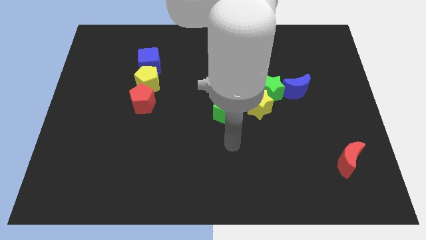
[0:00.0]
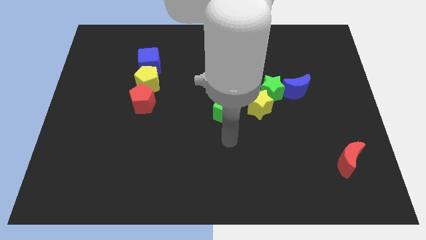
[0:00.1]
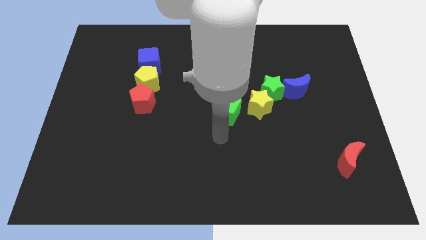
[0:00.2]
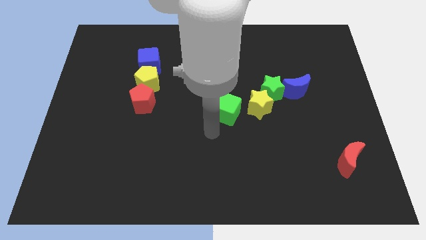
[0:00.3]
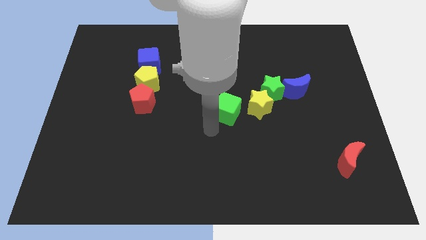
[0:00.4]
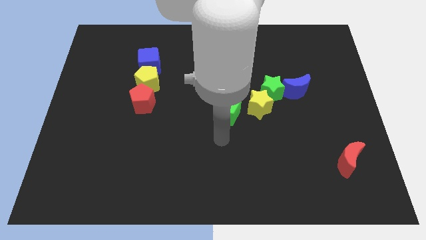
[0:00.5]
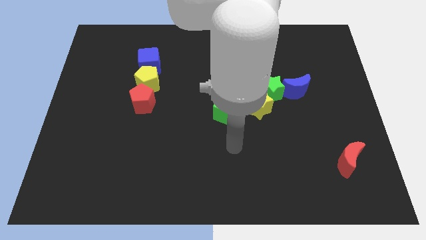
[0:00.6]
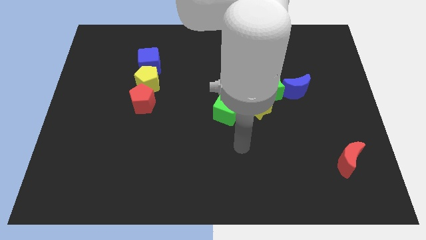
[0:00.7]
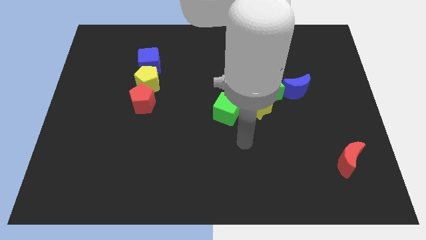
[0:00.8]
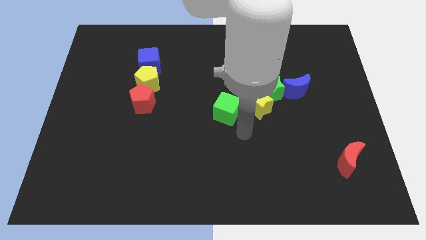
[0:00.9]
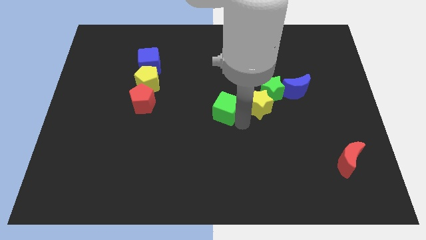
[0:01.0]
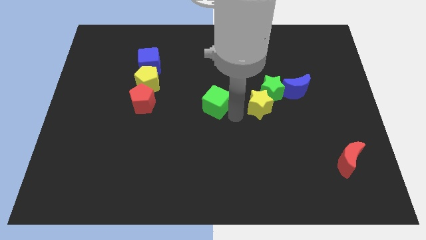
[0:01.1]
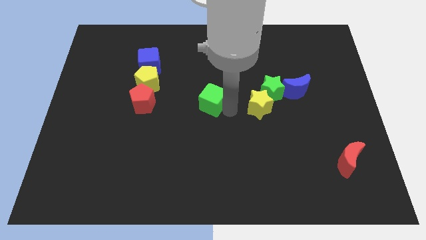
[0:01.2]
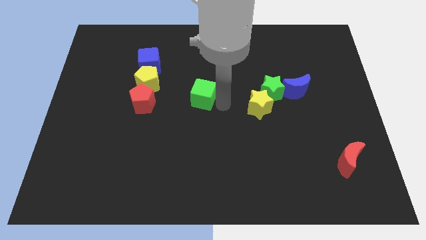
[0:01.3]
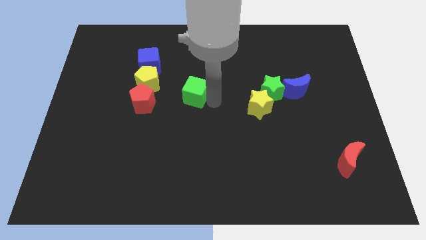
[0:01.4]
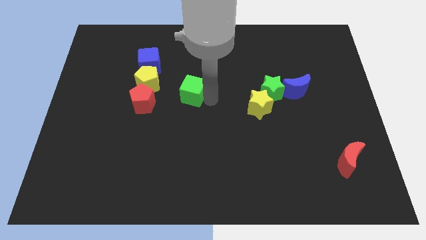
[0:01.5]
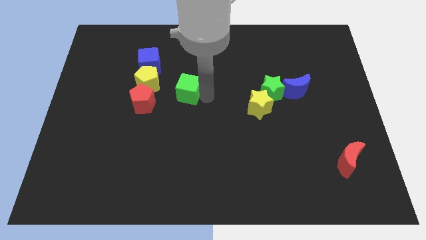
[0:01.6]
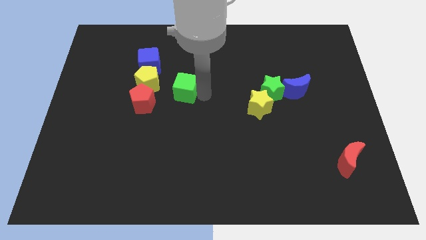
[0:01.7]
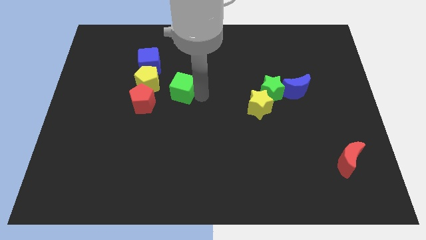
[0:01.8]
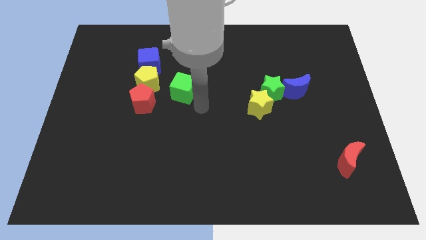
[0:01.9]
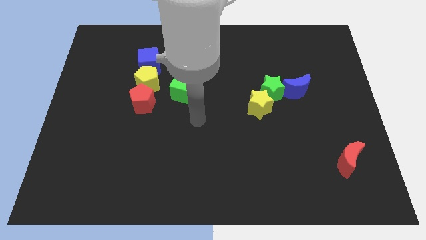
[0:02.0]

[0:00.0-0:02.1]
push the green cube to the right of the yellow pentagon

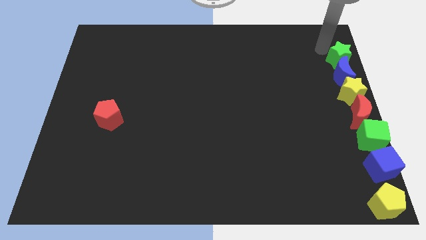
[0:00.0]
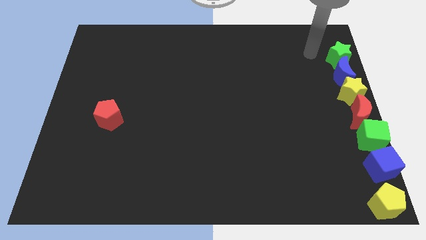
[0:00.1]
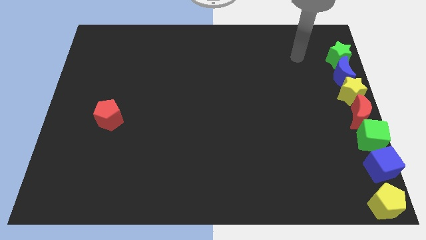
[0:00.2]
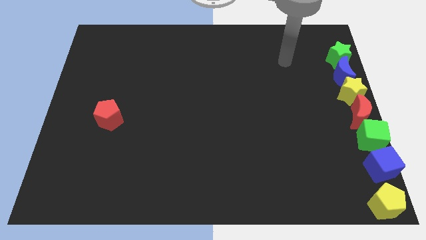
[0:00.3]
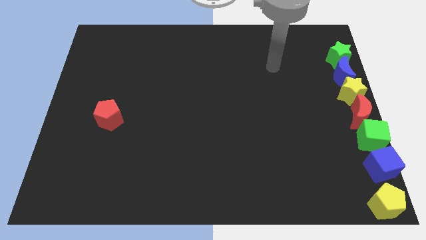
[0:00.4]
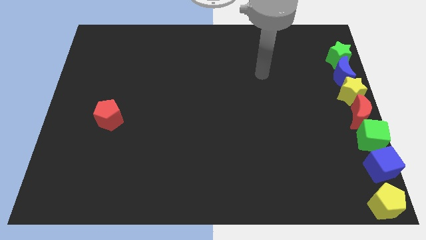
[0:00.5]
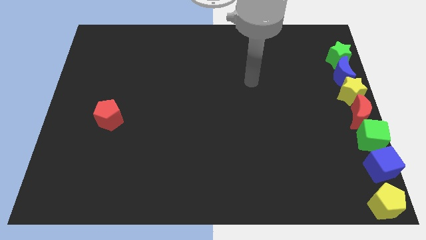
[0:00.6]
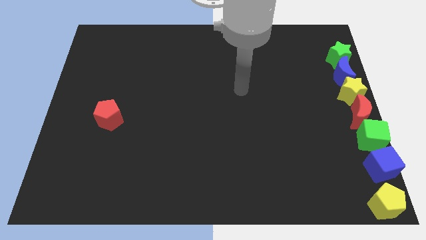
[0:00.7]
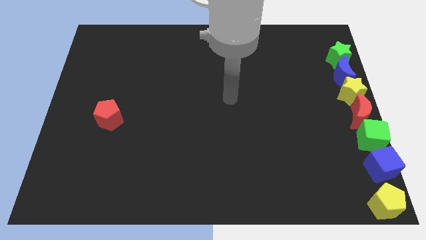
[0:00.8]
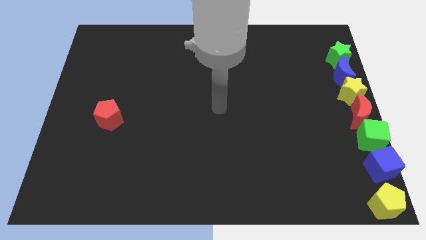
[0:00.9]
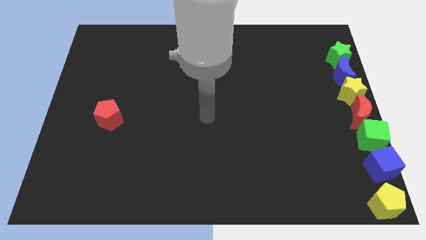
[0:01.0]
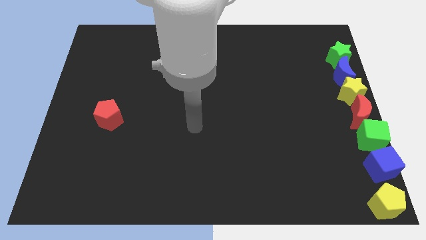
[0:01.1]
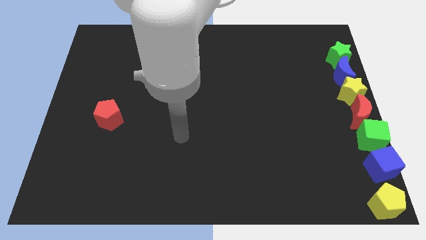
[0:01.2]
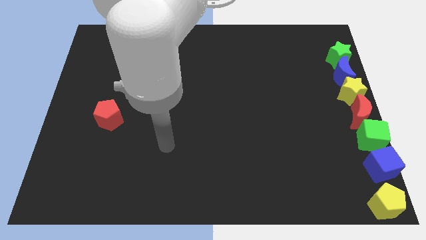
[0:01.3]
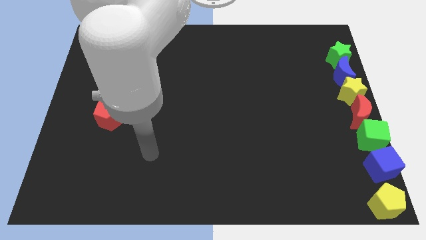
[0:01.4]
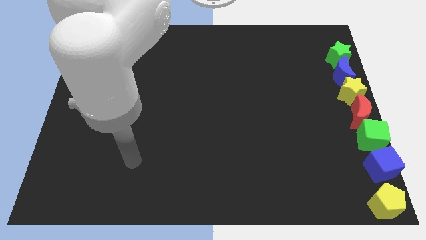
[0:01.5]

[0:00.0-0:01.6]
move your arm away from the green star

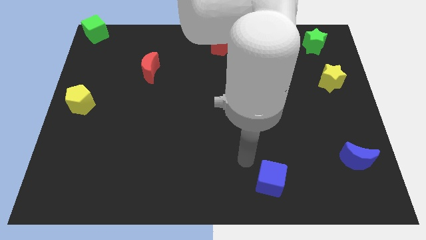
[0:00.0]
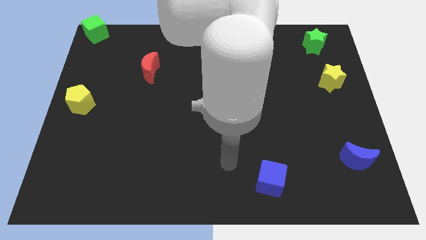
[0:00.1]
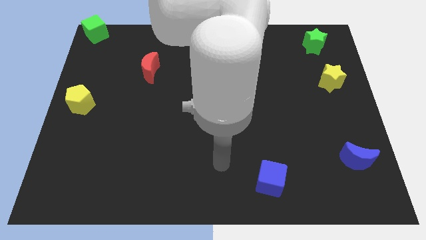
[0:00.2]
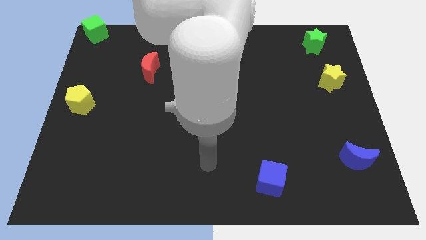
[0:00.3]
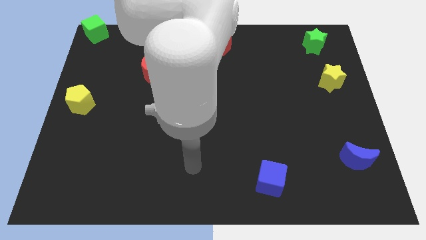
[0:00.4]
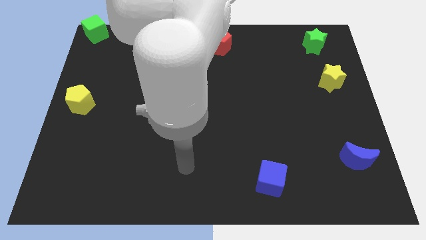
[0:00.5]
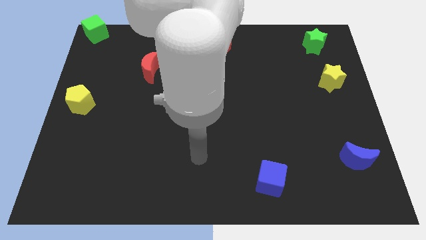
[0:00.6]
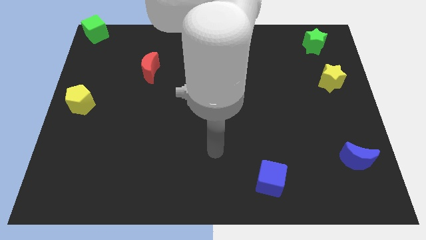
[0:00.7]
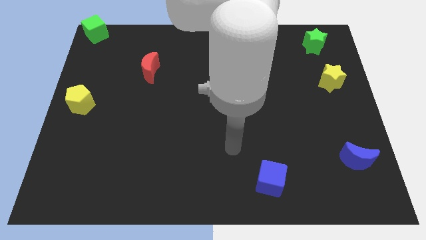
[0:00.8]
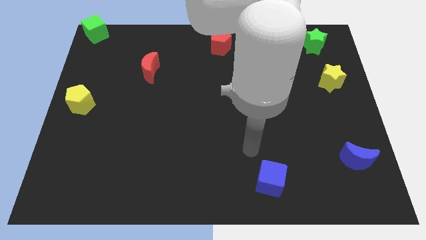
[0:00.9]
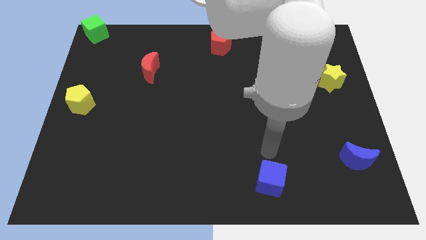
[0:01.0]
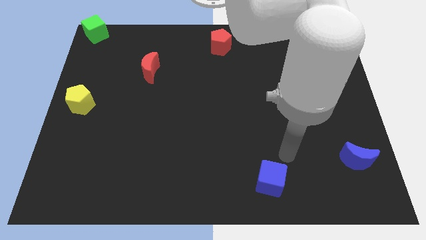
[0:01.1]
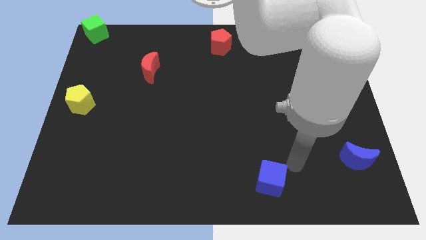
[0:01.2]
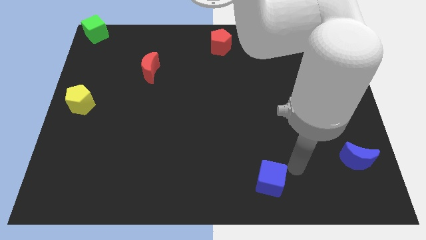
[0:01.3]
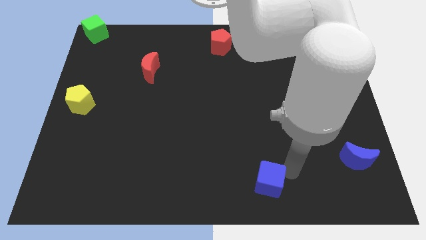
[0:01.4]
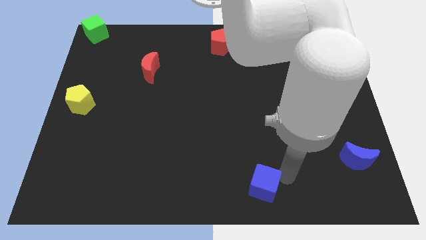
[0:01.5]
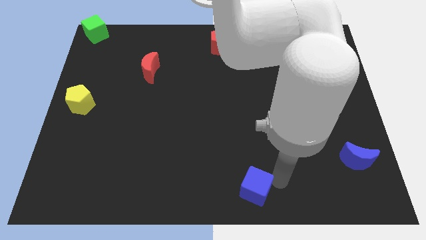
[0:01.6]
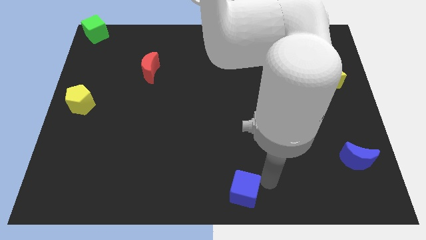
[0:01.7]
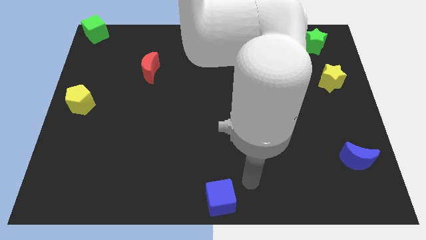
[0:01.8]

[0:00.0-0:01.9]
push the blue cube to the bottom center of the board

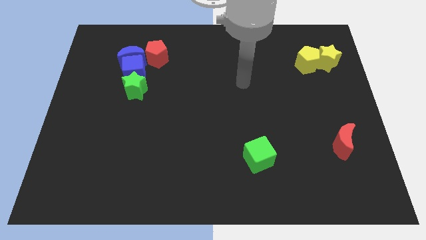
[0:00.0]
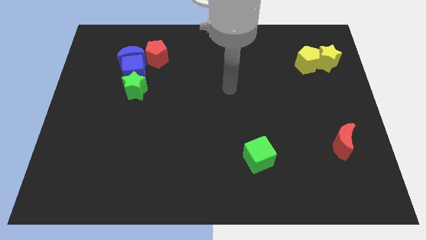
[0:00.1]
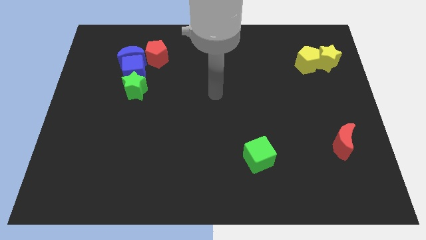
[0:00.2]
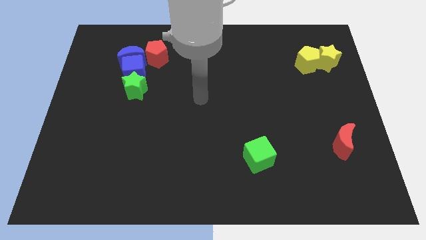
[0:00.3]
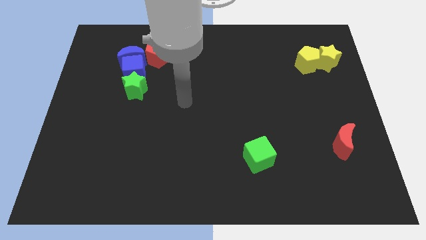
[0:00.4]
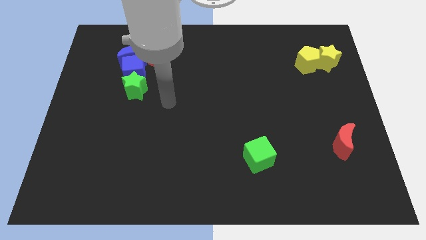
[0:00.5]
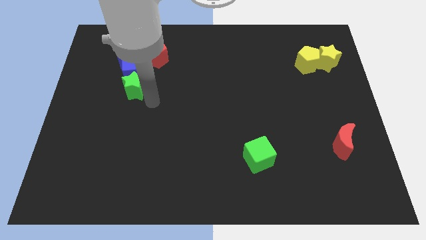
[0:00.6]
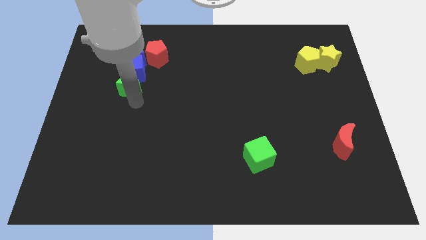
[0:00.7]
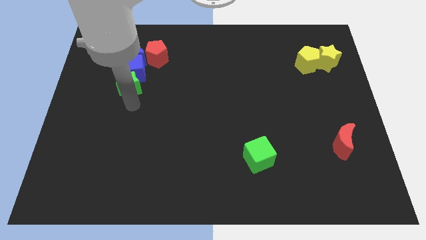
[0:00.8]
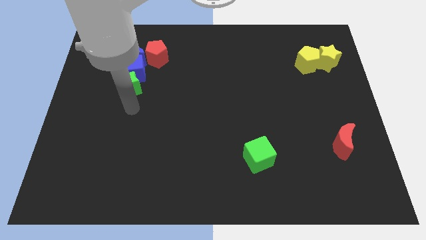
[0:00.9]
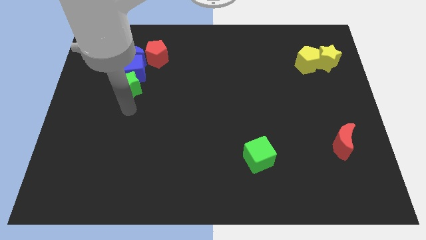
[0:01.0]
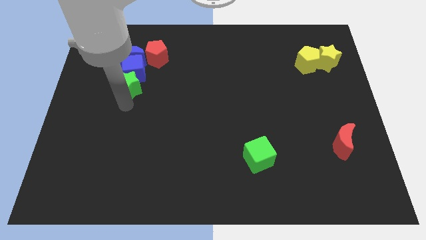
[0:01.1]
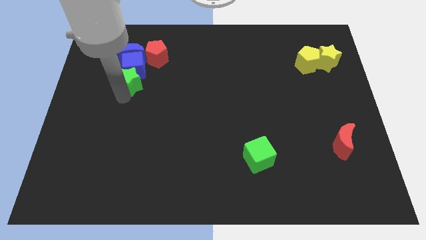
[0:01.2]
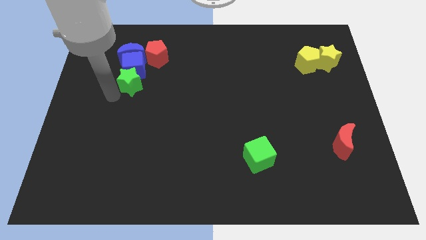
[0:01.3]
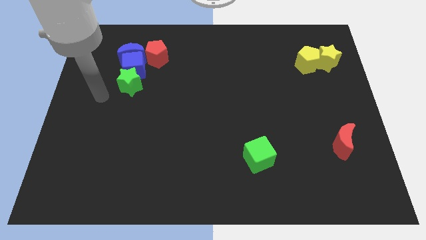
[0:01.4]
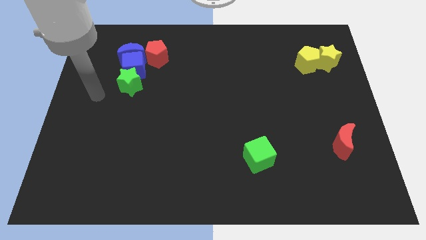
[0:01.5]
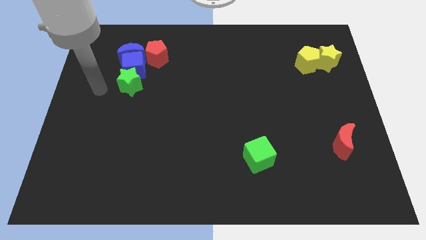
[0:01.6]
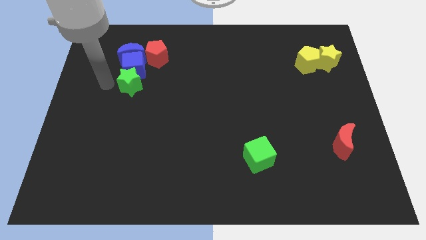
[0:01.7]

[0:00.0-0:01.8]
place your arm at the left side of the green star

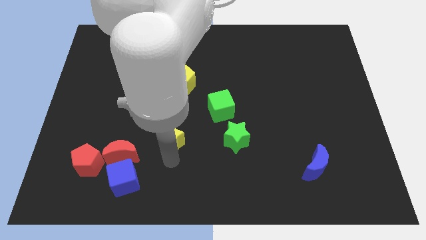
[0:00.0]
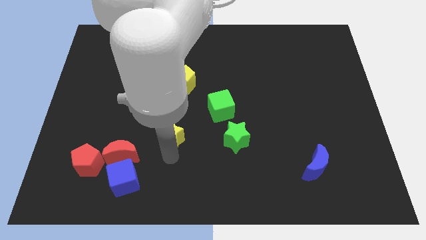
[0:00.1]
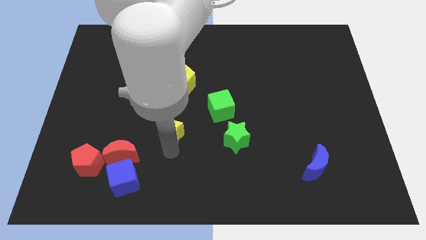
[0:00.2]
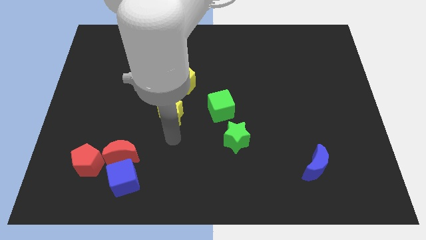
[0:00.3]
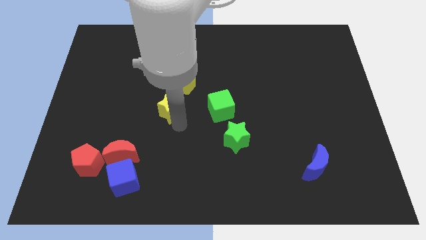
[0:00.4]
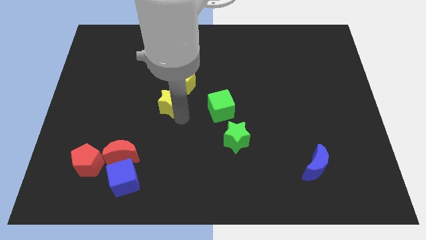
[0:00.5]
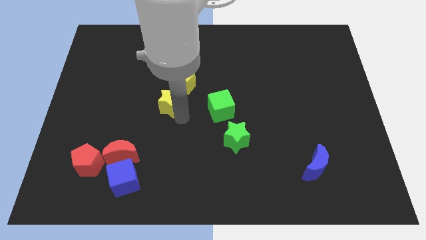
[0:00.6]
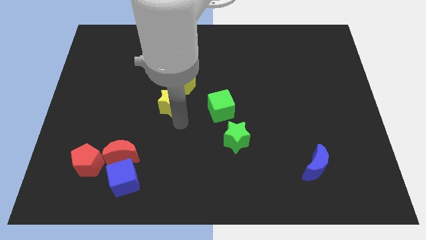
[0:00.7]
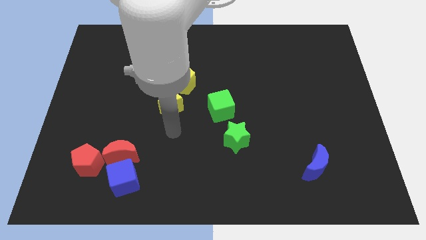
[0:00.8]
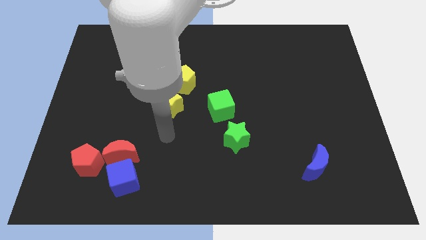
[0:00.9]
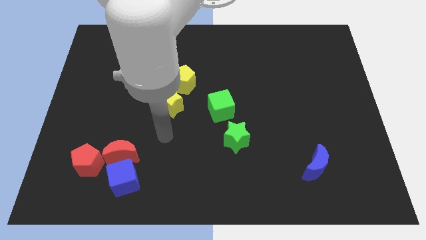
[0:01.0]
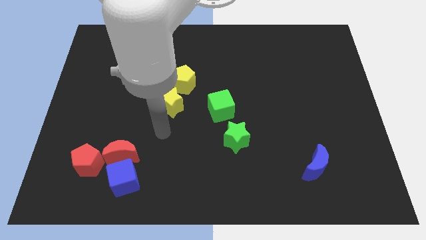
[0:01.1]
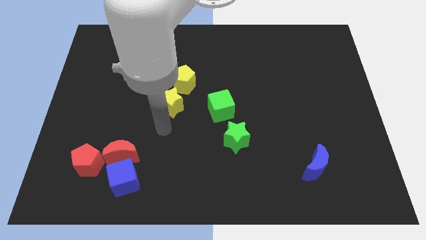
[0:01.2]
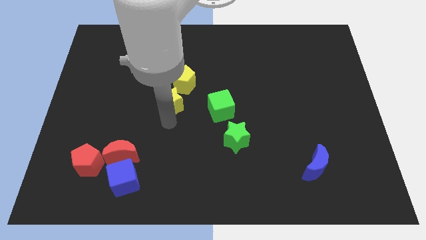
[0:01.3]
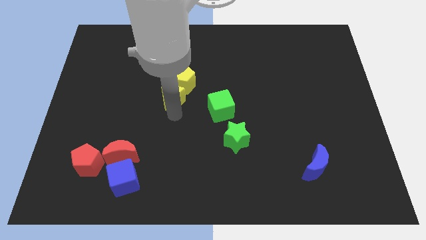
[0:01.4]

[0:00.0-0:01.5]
place yellow star to the bottom of yellow pentagon
